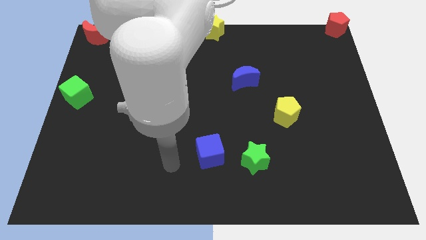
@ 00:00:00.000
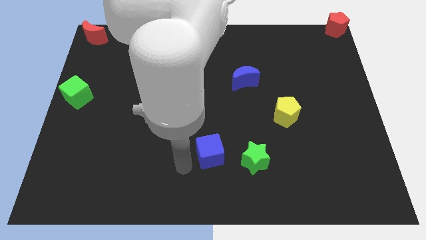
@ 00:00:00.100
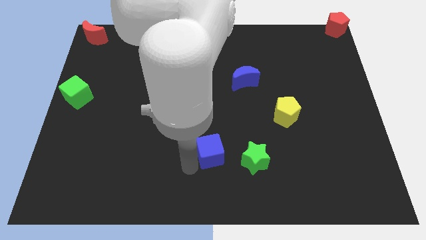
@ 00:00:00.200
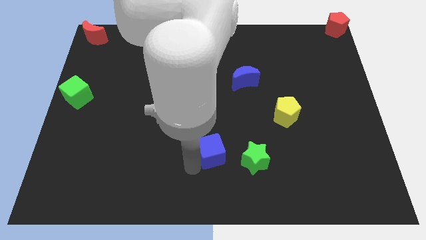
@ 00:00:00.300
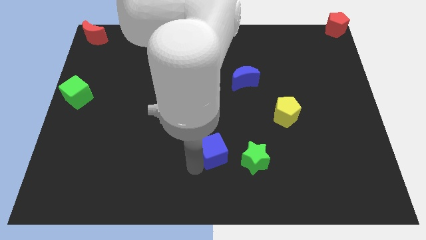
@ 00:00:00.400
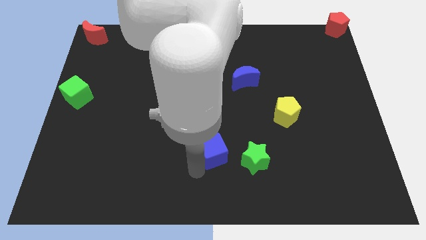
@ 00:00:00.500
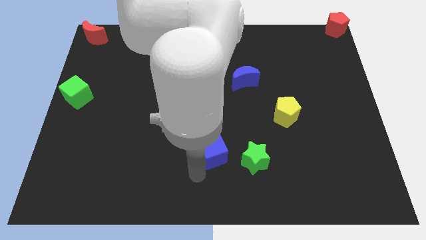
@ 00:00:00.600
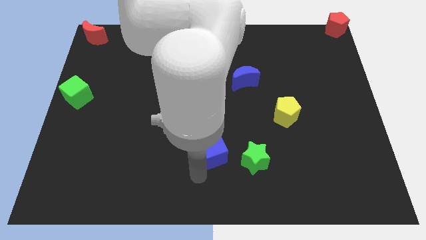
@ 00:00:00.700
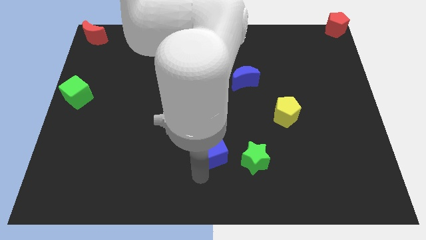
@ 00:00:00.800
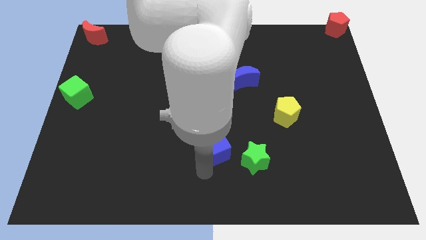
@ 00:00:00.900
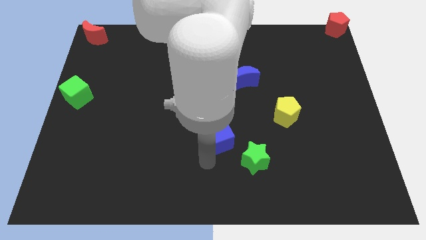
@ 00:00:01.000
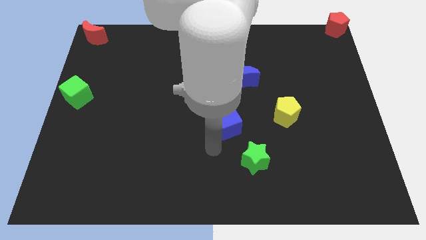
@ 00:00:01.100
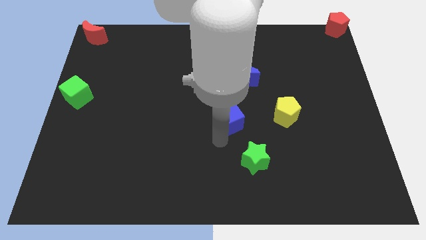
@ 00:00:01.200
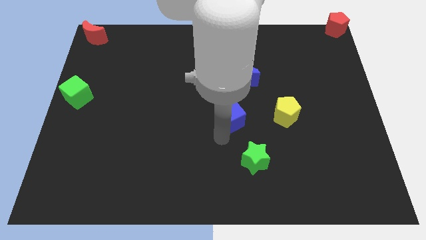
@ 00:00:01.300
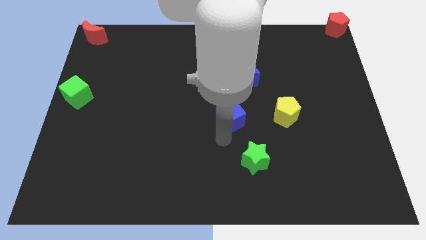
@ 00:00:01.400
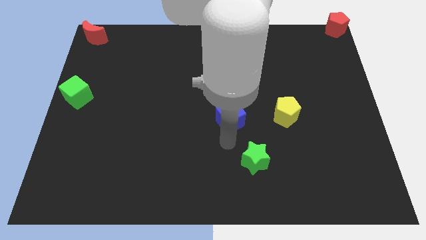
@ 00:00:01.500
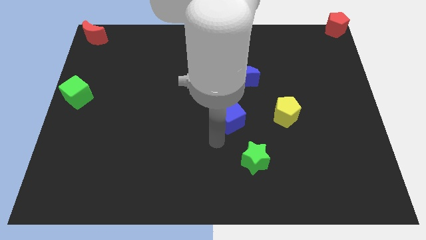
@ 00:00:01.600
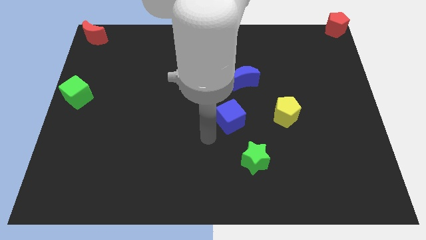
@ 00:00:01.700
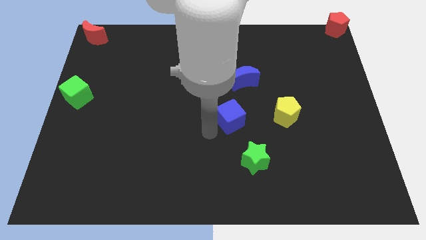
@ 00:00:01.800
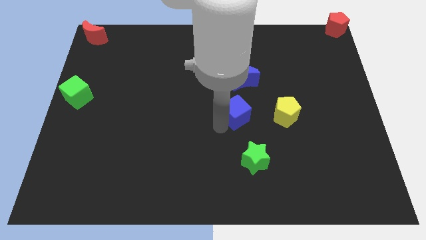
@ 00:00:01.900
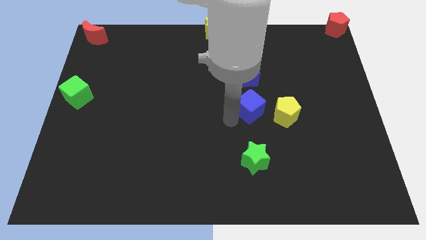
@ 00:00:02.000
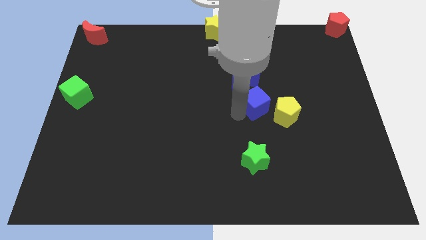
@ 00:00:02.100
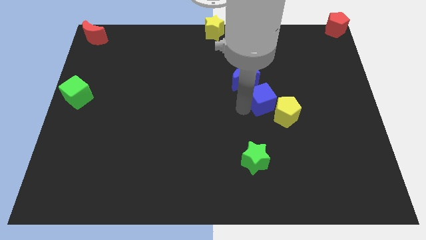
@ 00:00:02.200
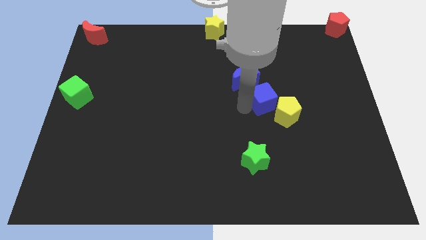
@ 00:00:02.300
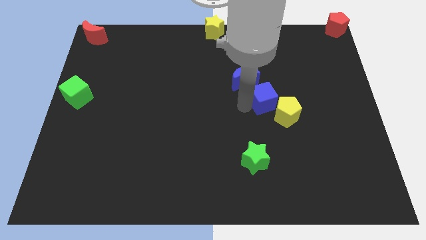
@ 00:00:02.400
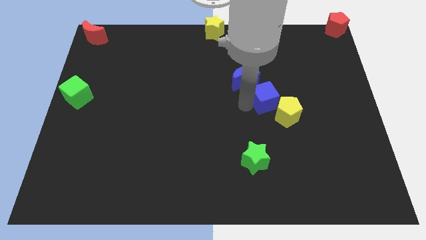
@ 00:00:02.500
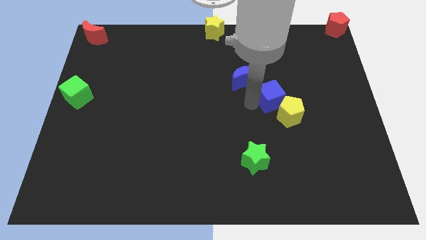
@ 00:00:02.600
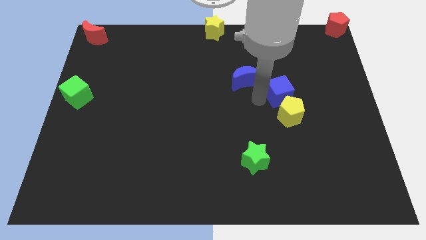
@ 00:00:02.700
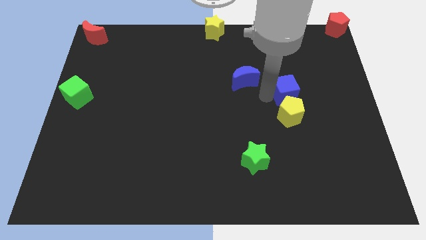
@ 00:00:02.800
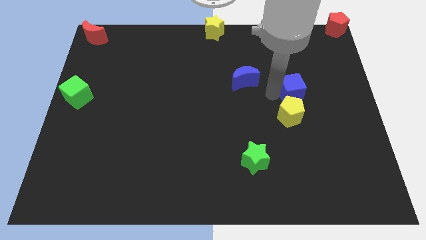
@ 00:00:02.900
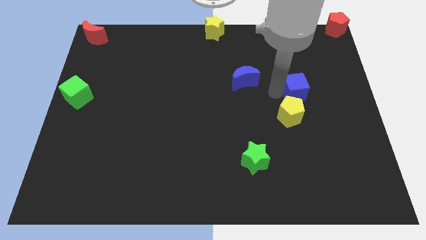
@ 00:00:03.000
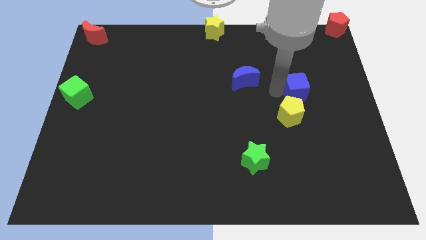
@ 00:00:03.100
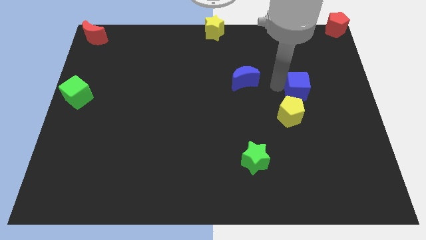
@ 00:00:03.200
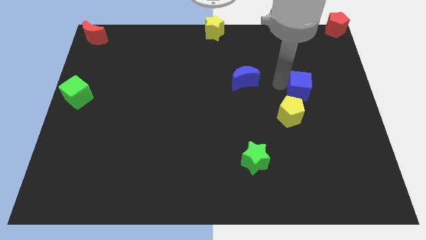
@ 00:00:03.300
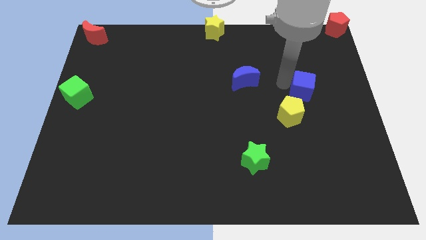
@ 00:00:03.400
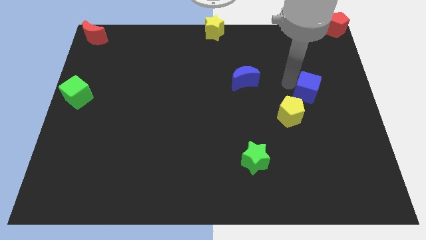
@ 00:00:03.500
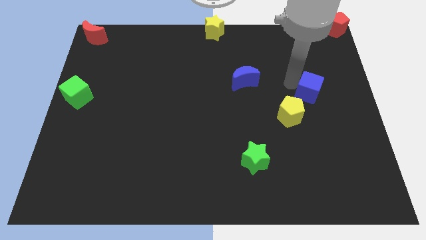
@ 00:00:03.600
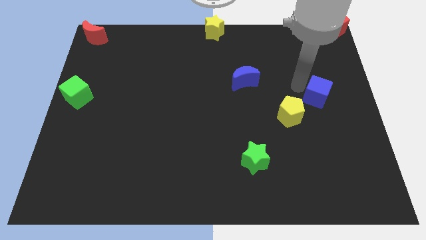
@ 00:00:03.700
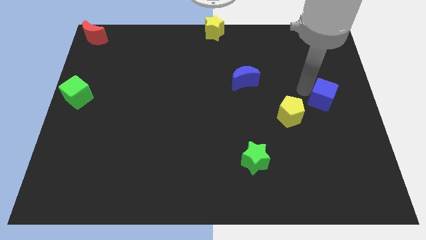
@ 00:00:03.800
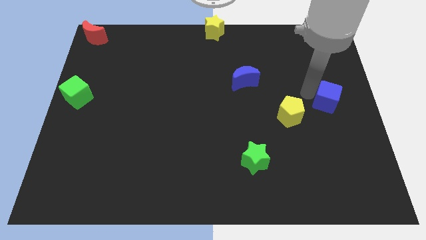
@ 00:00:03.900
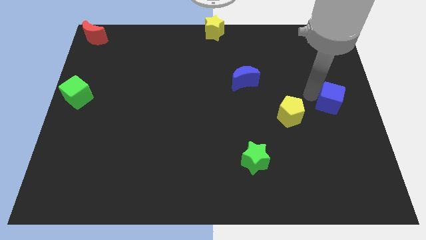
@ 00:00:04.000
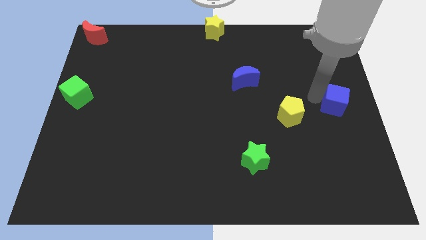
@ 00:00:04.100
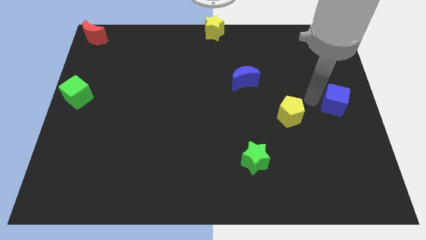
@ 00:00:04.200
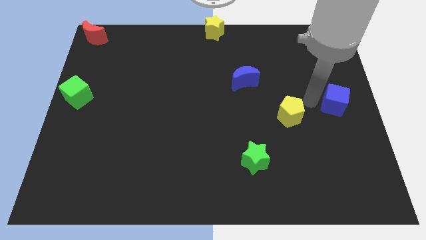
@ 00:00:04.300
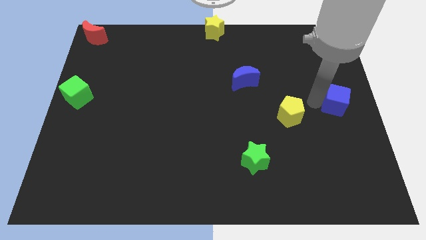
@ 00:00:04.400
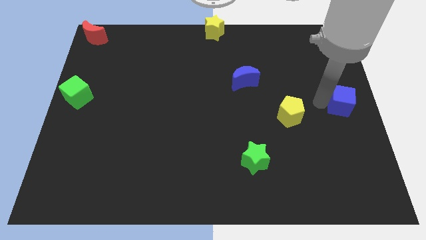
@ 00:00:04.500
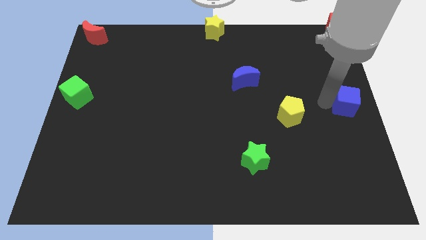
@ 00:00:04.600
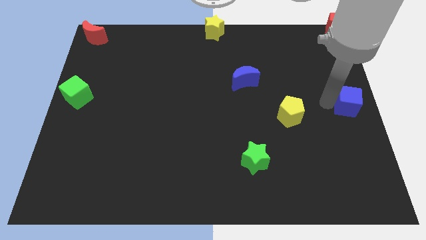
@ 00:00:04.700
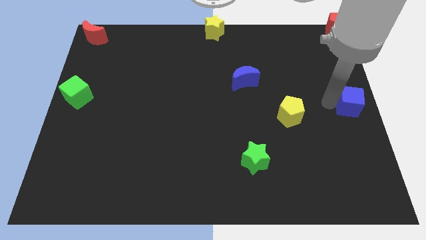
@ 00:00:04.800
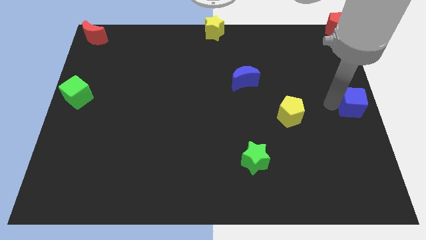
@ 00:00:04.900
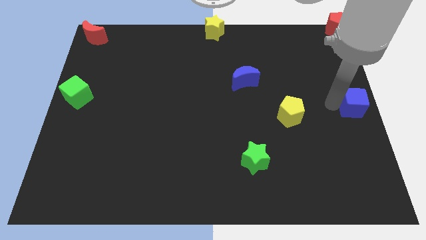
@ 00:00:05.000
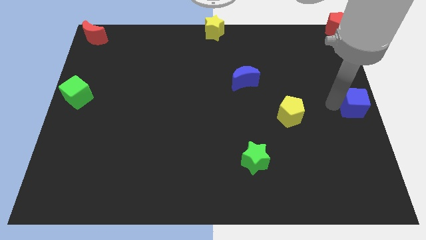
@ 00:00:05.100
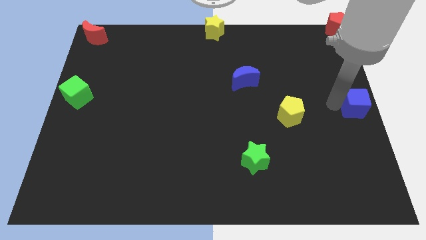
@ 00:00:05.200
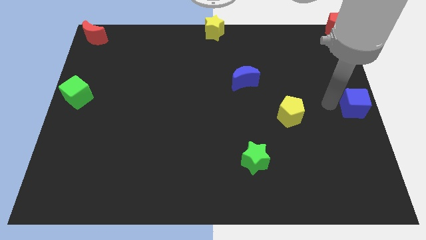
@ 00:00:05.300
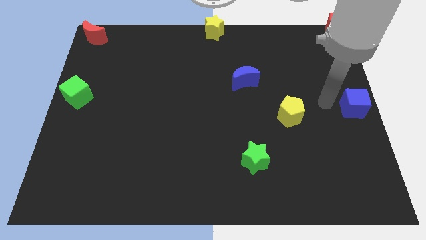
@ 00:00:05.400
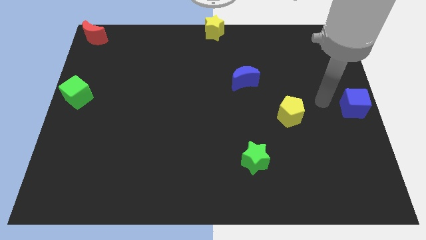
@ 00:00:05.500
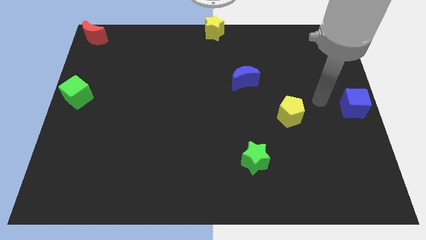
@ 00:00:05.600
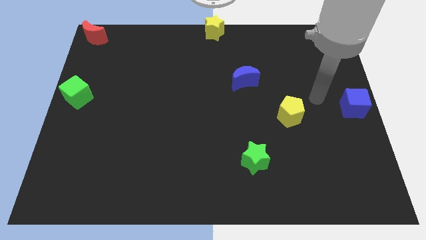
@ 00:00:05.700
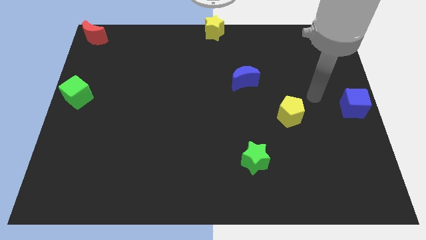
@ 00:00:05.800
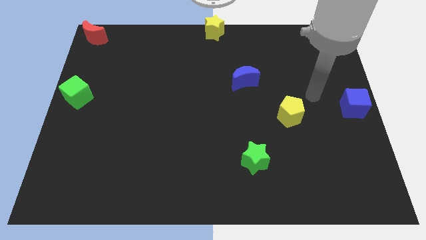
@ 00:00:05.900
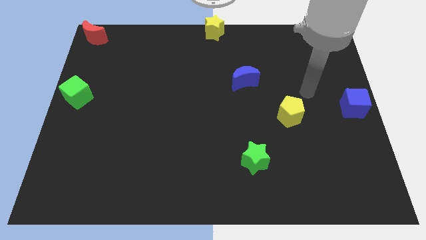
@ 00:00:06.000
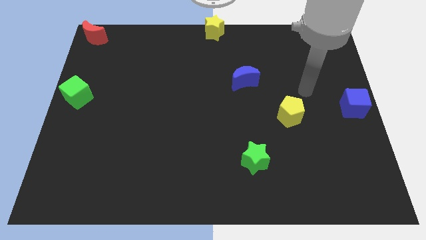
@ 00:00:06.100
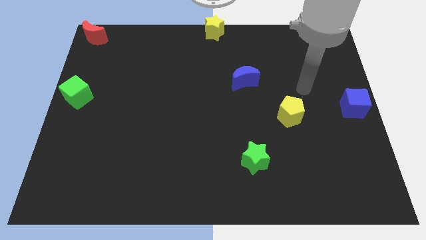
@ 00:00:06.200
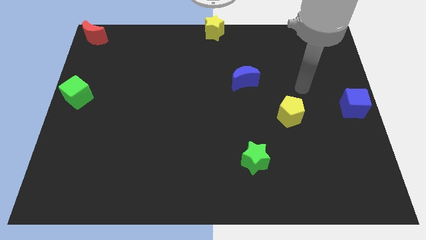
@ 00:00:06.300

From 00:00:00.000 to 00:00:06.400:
place the blue cube to the right center

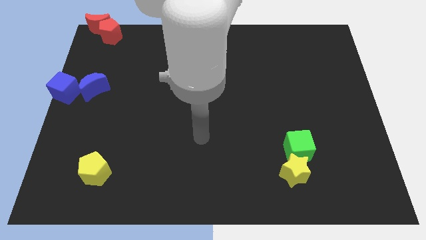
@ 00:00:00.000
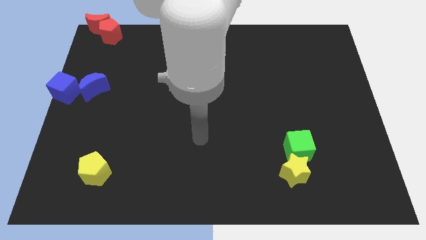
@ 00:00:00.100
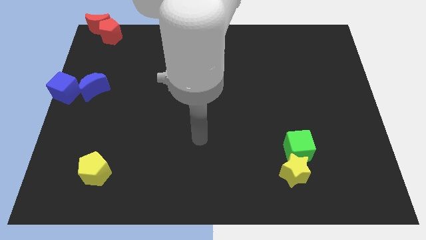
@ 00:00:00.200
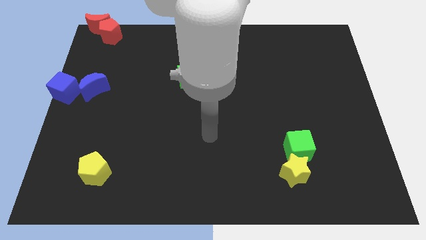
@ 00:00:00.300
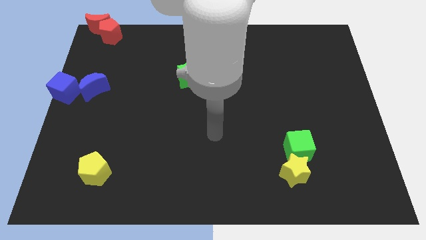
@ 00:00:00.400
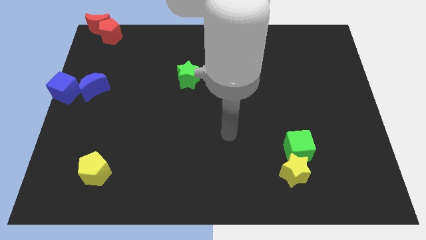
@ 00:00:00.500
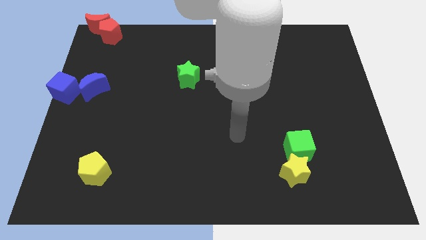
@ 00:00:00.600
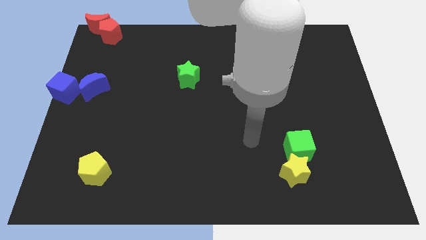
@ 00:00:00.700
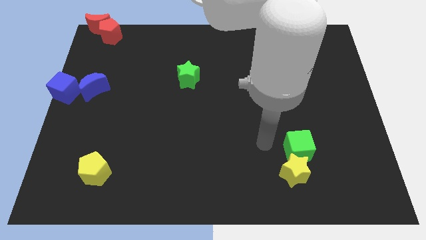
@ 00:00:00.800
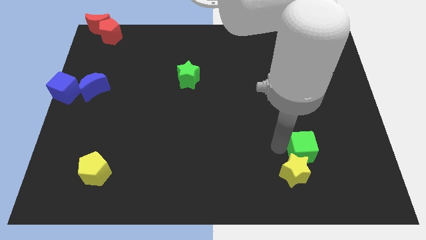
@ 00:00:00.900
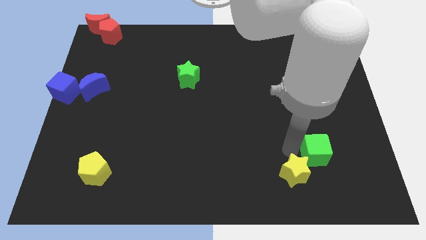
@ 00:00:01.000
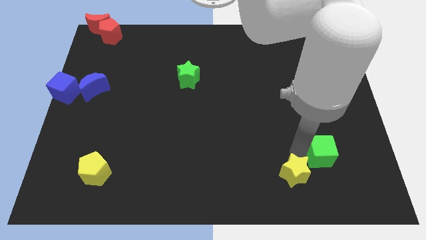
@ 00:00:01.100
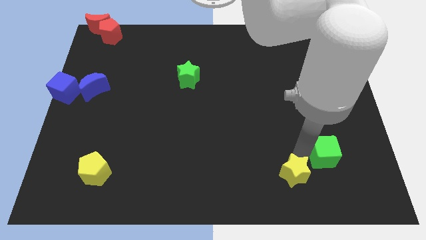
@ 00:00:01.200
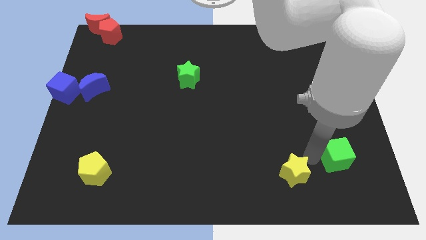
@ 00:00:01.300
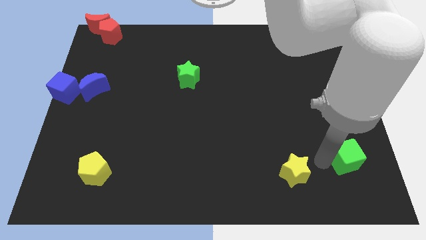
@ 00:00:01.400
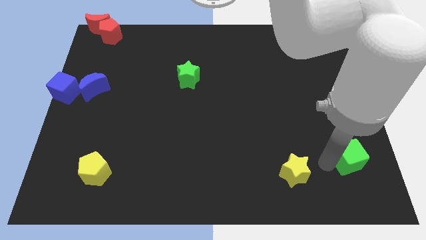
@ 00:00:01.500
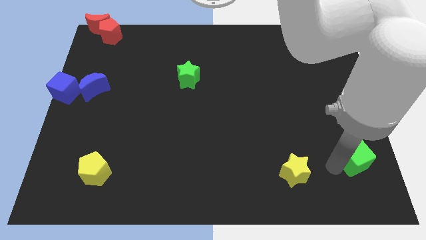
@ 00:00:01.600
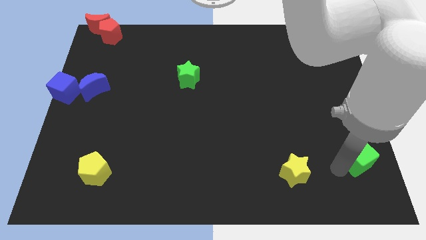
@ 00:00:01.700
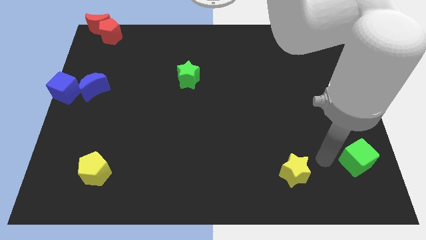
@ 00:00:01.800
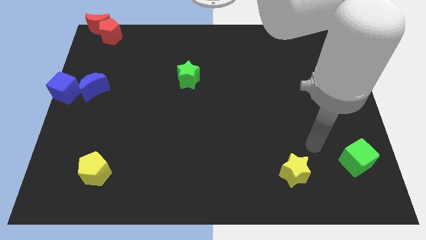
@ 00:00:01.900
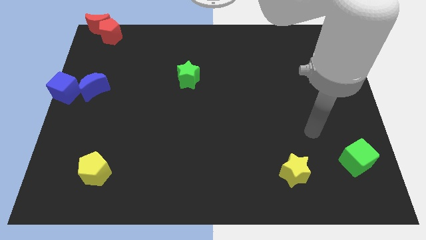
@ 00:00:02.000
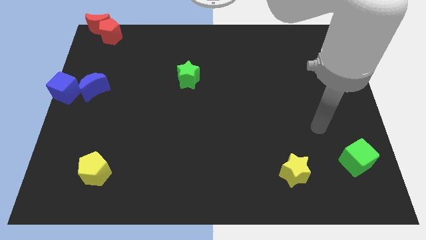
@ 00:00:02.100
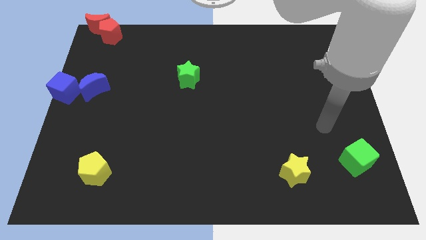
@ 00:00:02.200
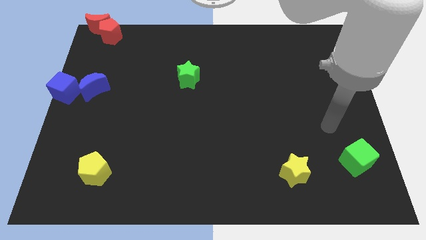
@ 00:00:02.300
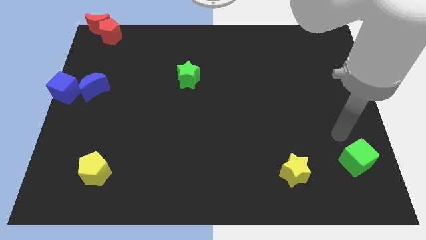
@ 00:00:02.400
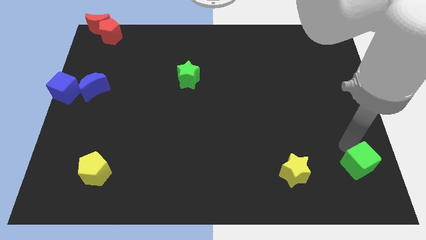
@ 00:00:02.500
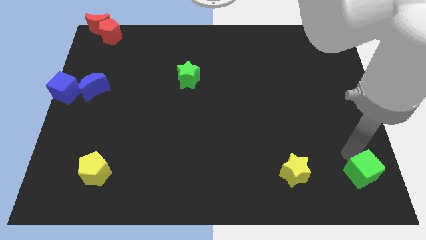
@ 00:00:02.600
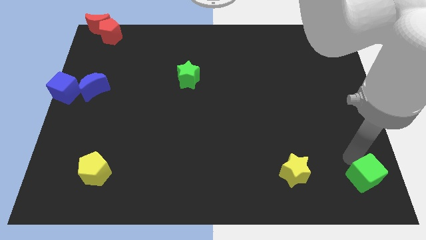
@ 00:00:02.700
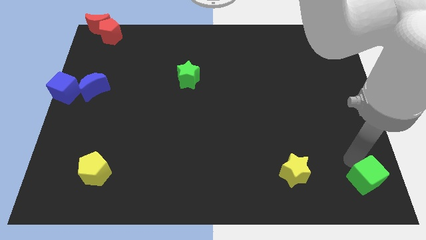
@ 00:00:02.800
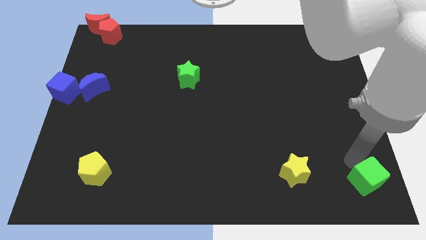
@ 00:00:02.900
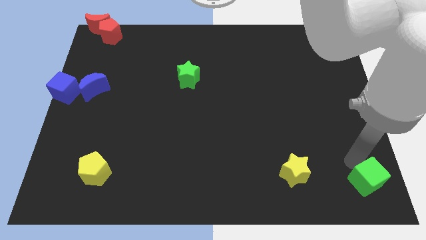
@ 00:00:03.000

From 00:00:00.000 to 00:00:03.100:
move the green cube to the bottom right corner
